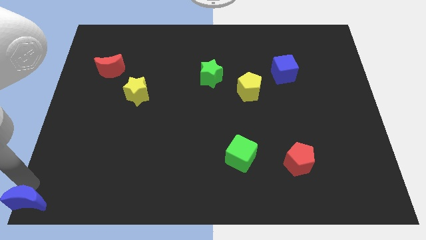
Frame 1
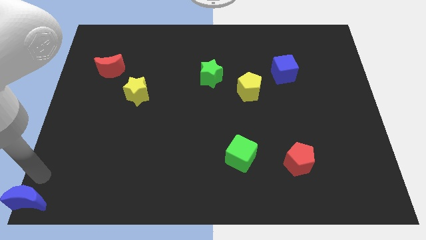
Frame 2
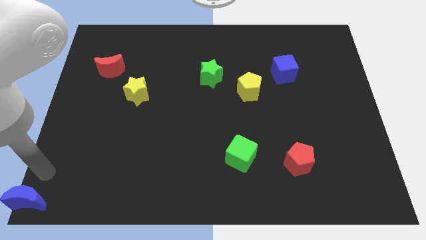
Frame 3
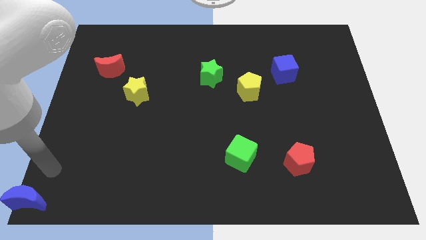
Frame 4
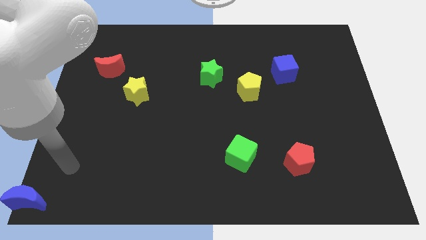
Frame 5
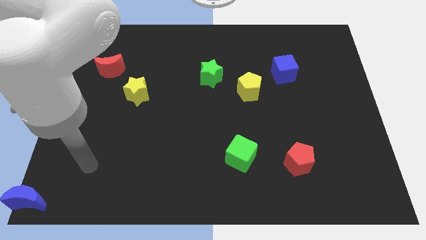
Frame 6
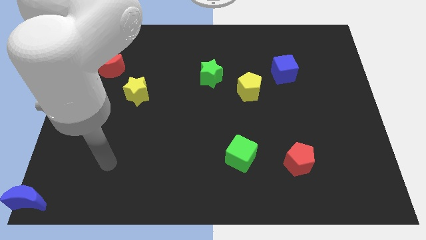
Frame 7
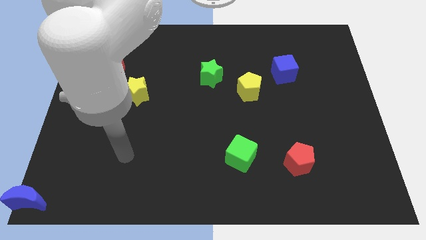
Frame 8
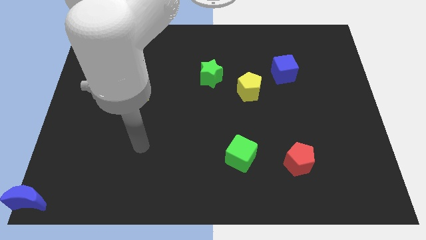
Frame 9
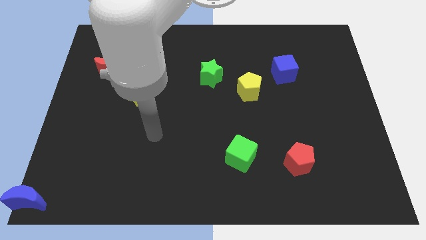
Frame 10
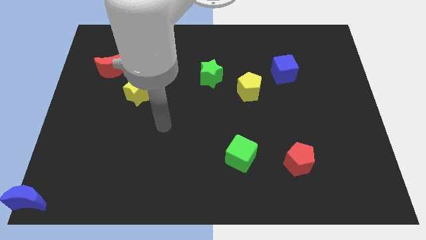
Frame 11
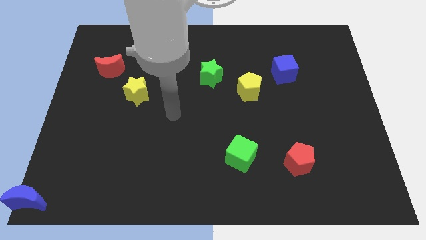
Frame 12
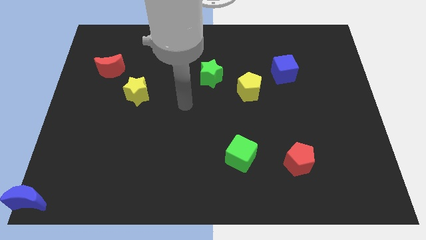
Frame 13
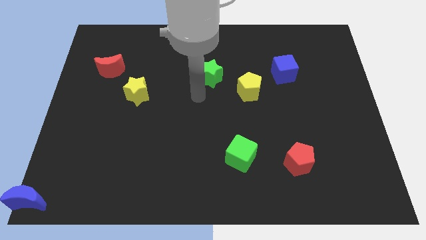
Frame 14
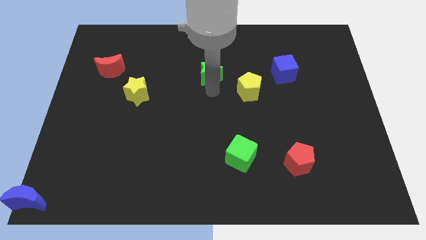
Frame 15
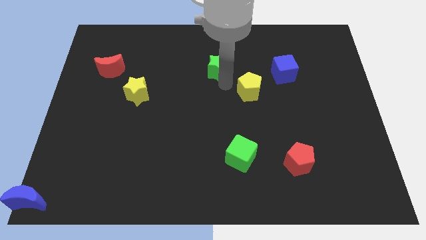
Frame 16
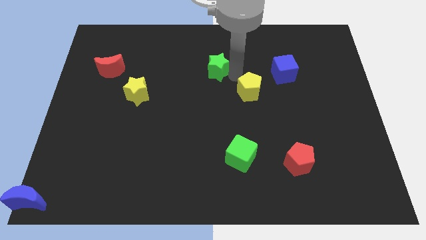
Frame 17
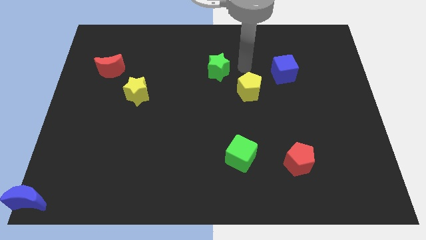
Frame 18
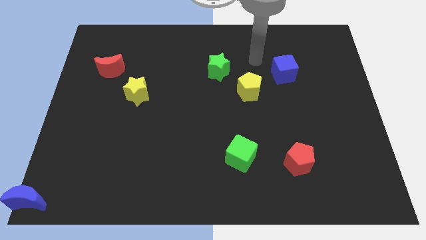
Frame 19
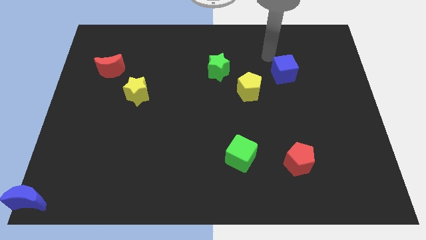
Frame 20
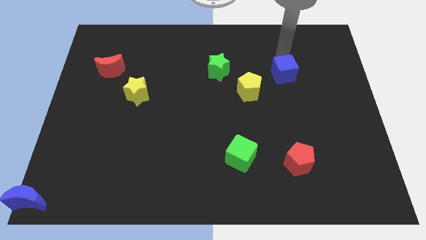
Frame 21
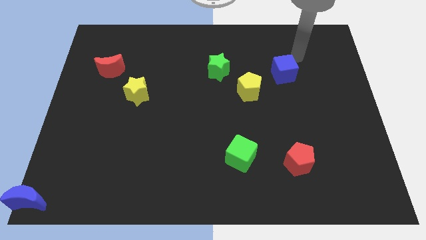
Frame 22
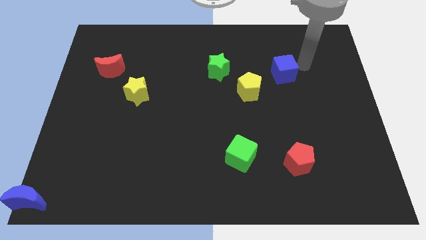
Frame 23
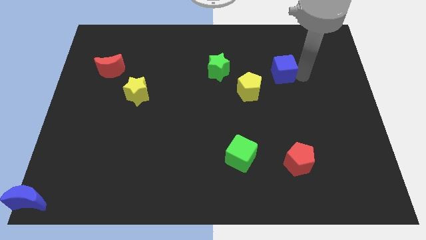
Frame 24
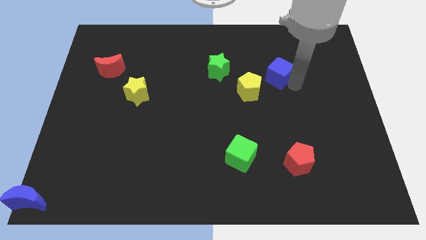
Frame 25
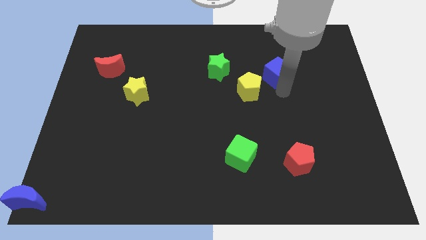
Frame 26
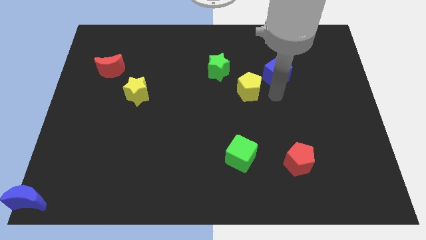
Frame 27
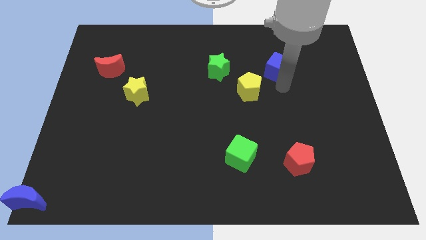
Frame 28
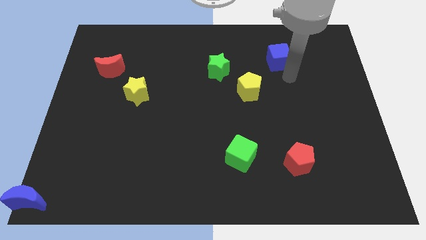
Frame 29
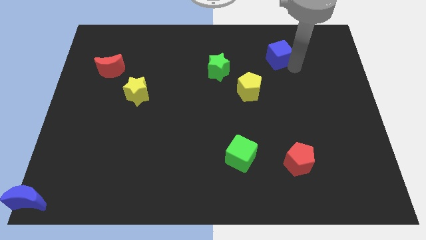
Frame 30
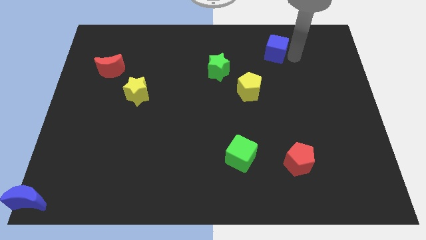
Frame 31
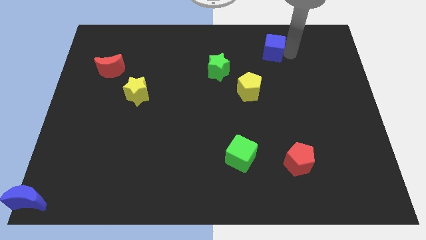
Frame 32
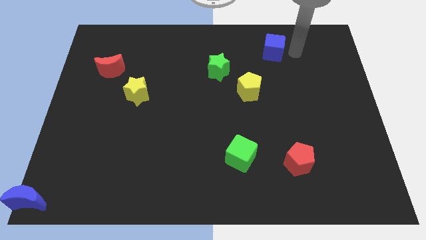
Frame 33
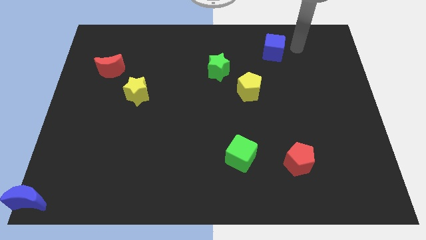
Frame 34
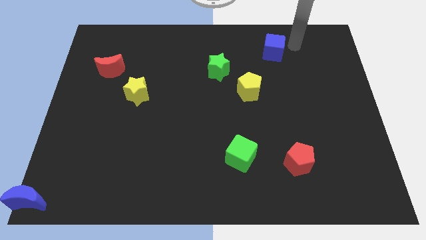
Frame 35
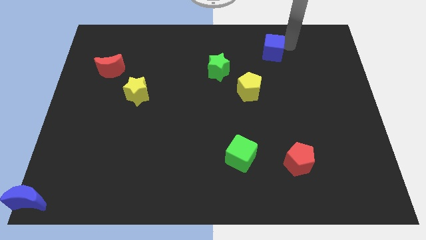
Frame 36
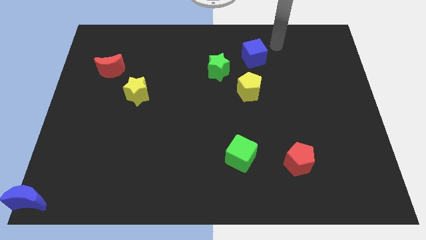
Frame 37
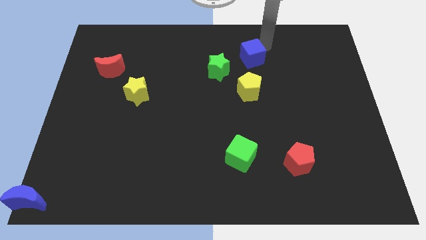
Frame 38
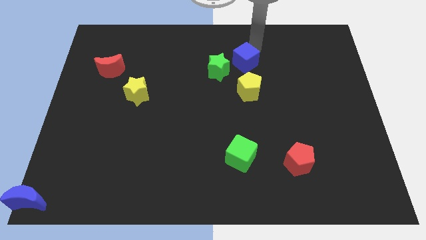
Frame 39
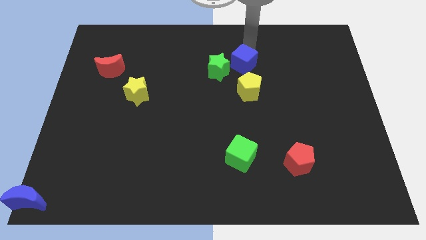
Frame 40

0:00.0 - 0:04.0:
move the blue cube to the top of the yellow pentagon

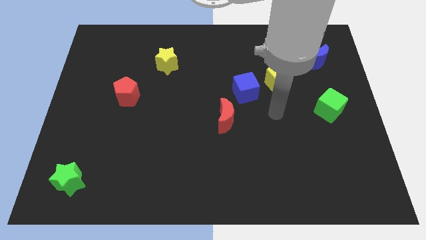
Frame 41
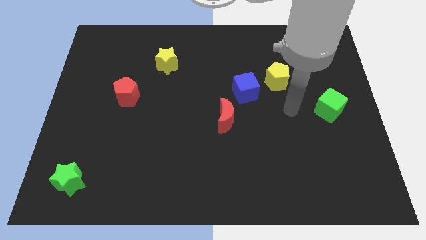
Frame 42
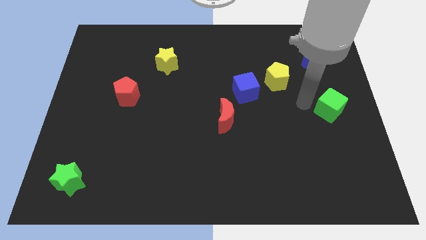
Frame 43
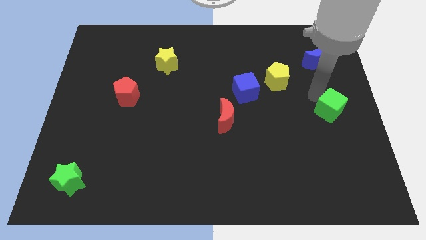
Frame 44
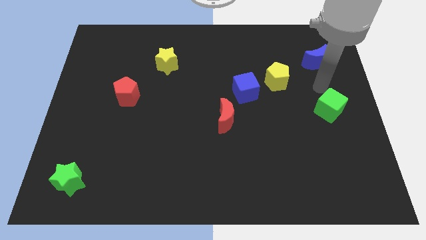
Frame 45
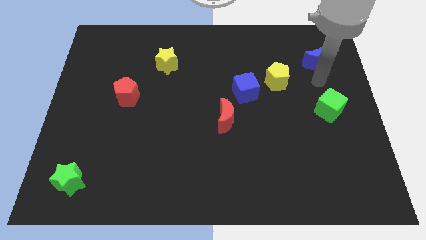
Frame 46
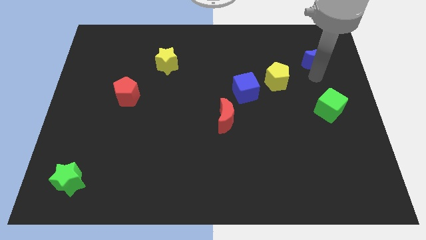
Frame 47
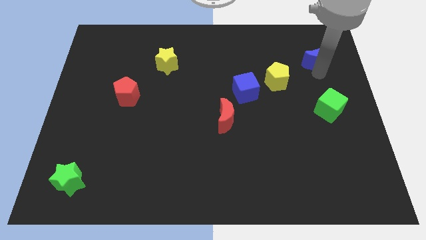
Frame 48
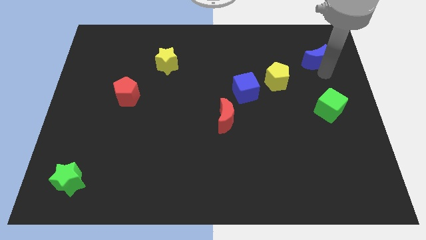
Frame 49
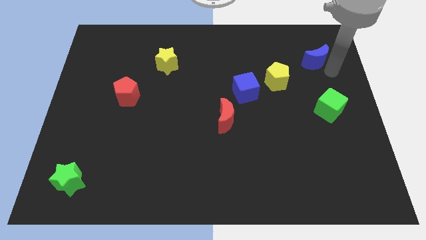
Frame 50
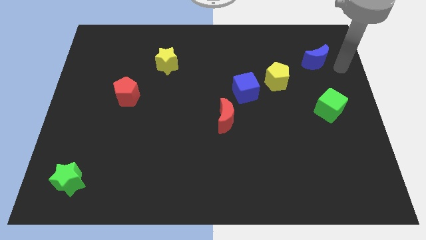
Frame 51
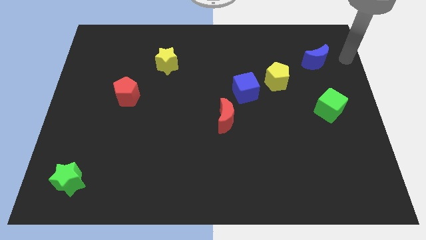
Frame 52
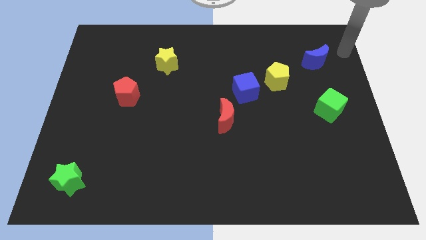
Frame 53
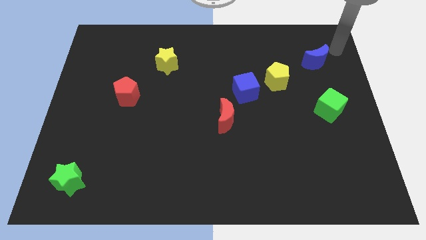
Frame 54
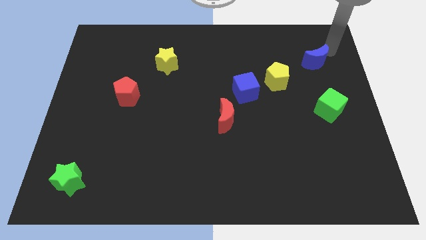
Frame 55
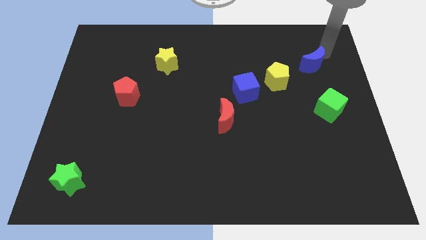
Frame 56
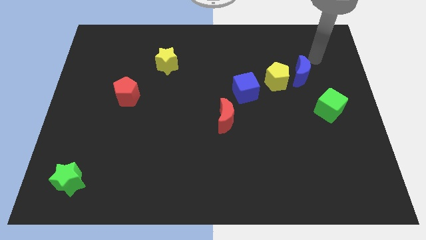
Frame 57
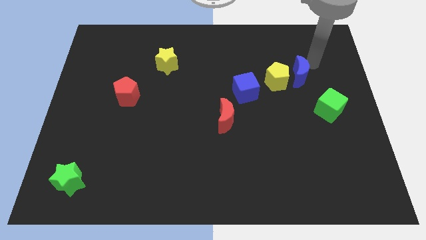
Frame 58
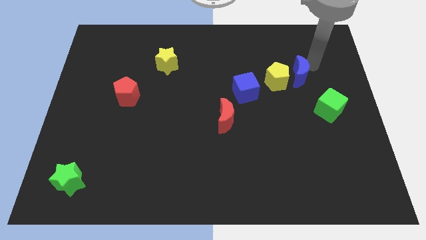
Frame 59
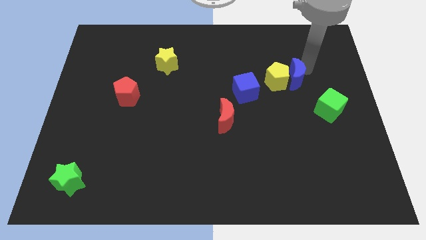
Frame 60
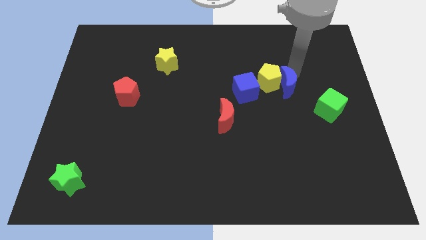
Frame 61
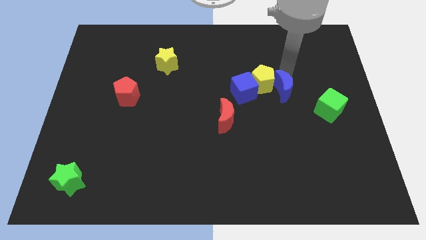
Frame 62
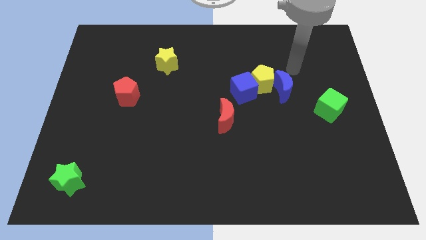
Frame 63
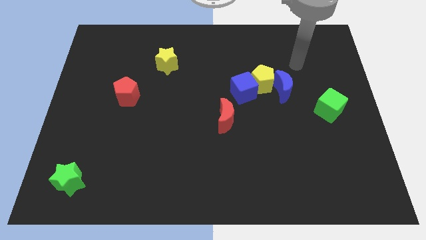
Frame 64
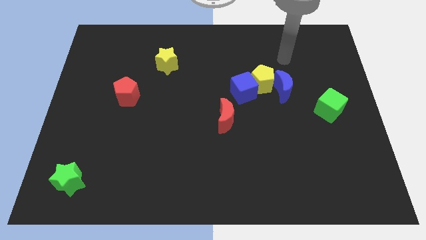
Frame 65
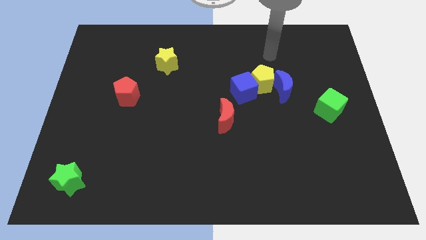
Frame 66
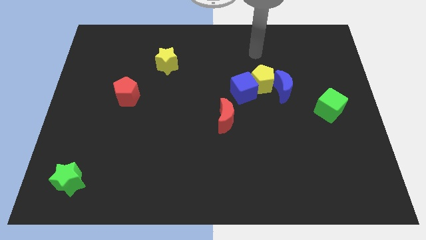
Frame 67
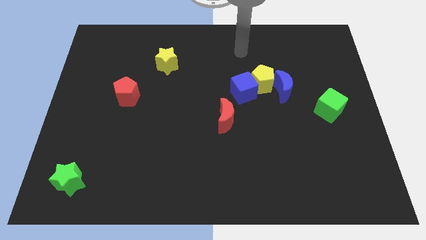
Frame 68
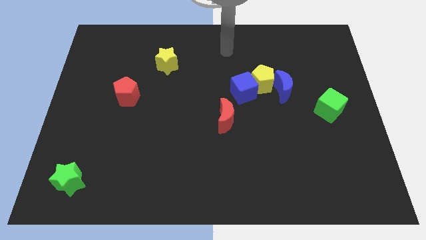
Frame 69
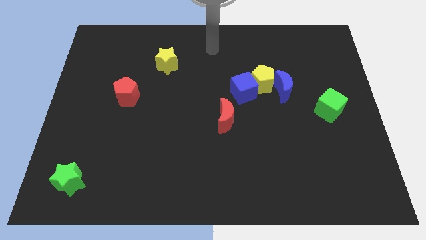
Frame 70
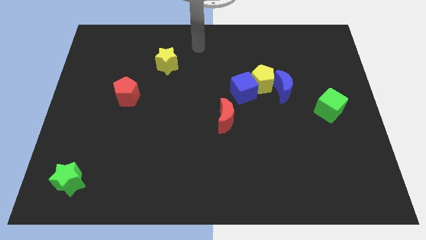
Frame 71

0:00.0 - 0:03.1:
group up the blue crescent yellow pentagon and blue cube at the top side of the red moon

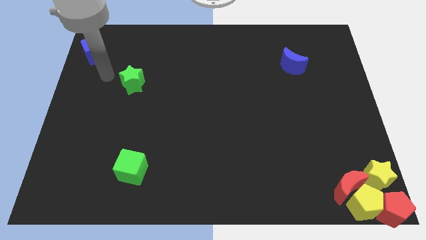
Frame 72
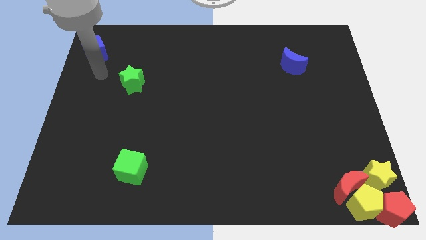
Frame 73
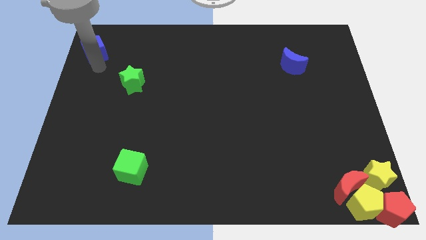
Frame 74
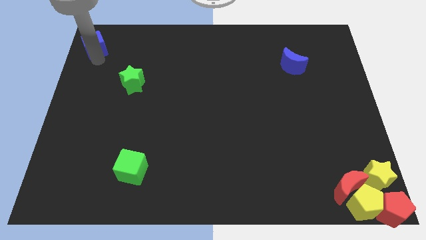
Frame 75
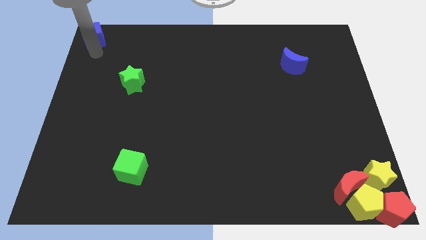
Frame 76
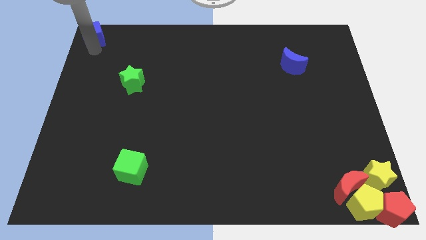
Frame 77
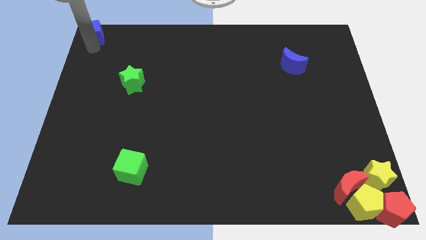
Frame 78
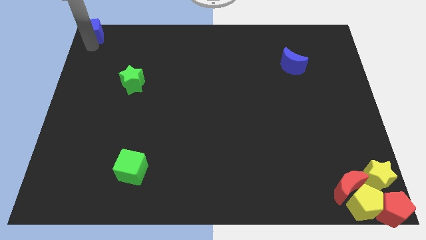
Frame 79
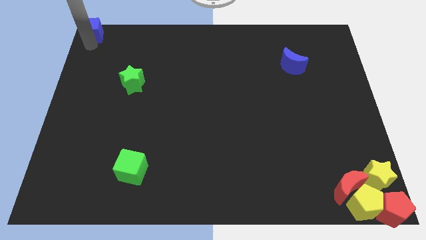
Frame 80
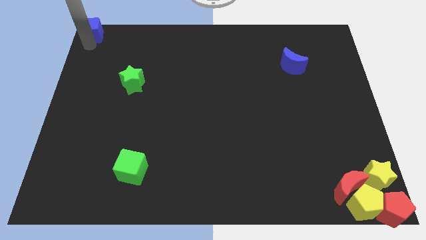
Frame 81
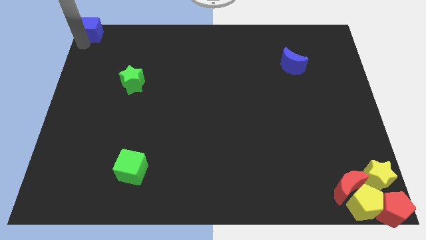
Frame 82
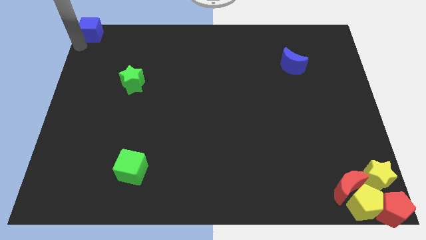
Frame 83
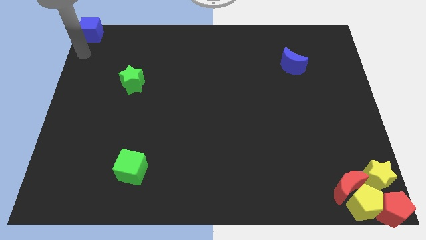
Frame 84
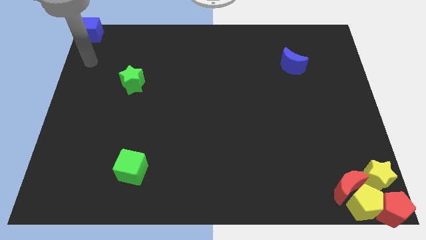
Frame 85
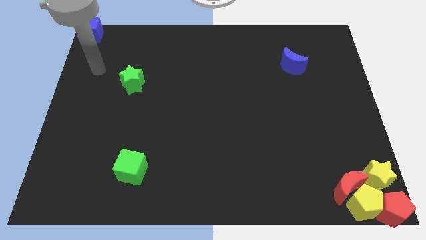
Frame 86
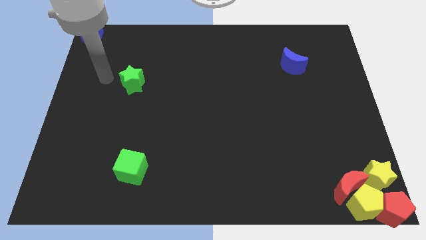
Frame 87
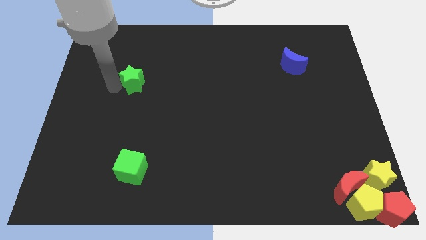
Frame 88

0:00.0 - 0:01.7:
move the blue cube to the top left corner of the board

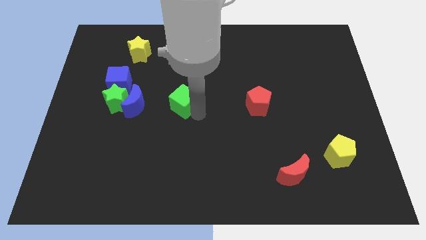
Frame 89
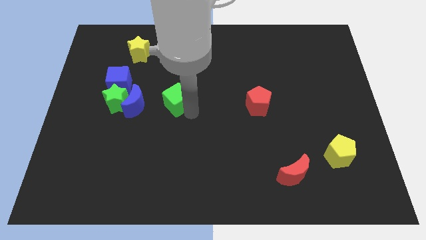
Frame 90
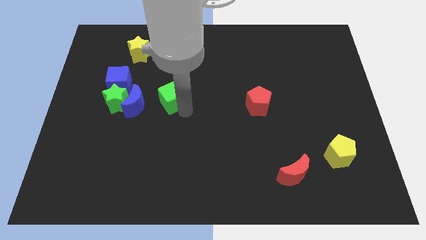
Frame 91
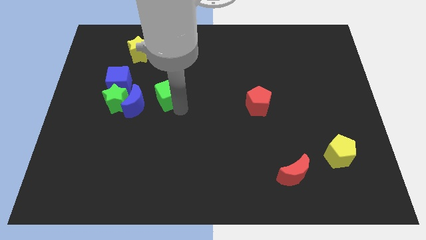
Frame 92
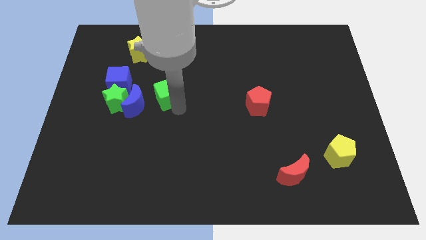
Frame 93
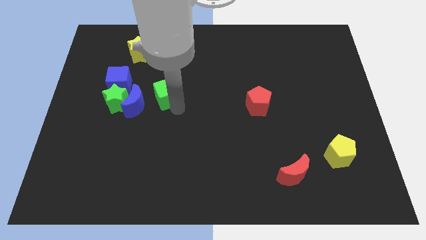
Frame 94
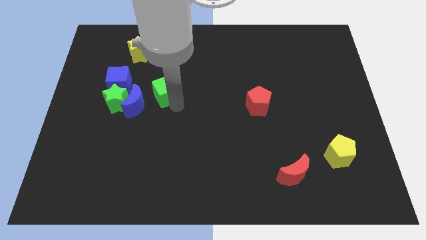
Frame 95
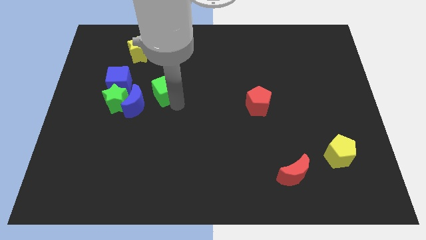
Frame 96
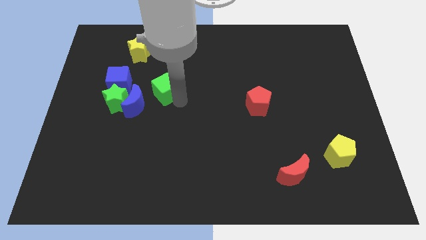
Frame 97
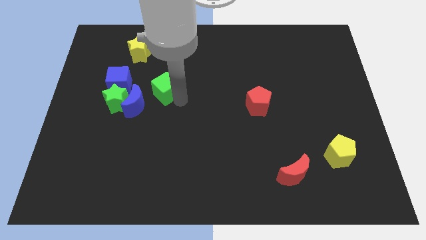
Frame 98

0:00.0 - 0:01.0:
place green cube parallel to blue moon
